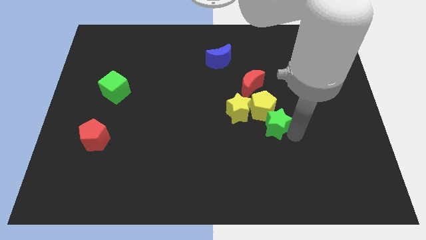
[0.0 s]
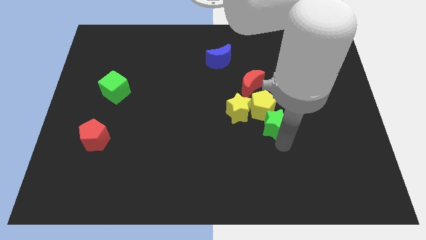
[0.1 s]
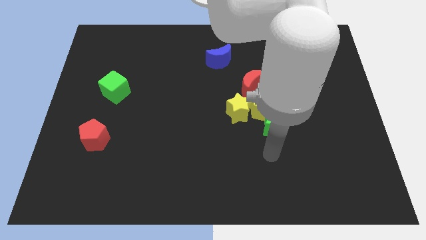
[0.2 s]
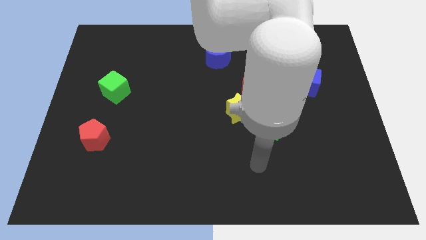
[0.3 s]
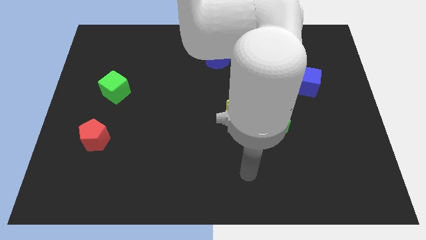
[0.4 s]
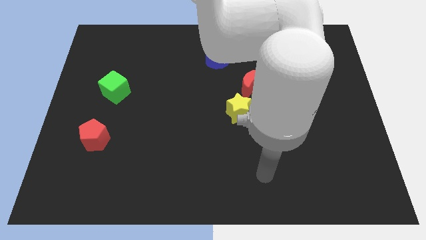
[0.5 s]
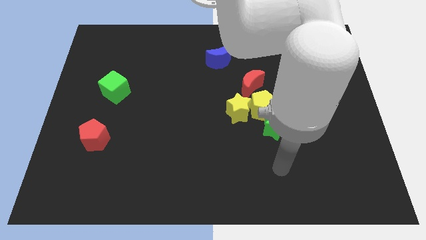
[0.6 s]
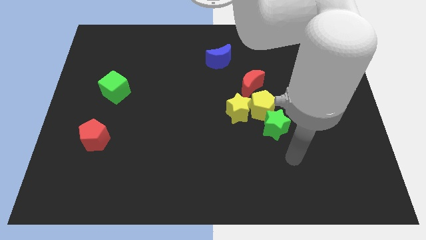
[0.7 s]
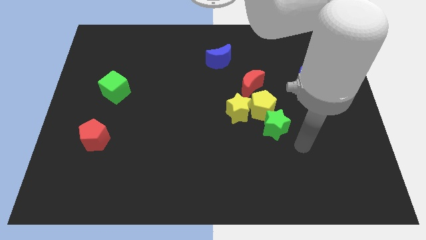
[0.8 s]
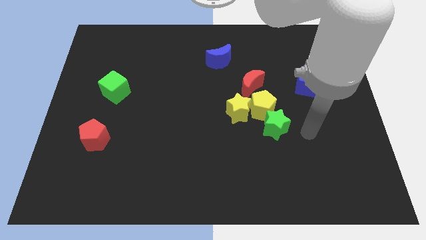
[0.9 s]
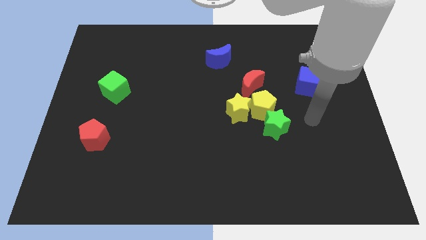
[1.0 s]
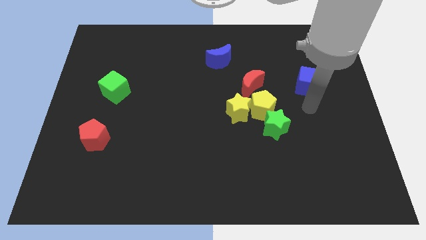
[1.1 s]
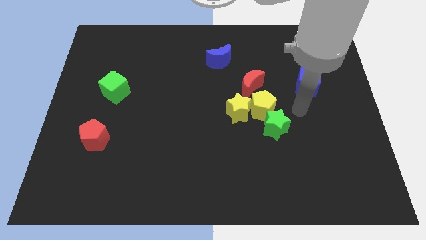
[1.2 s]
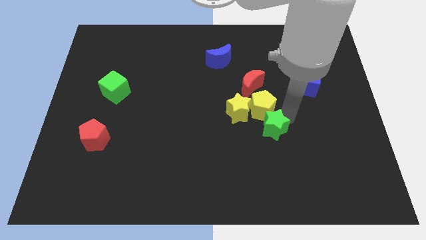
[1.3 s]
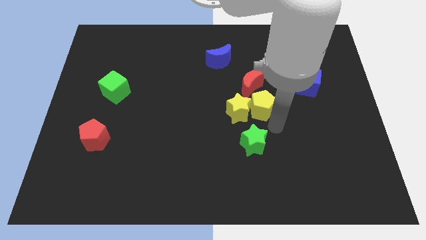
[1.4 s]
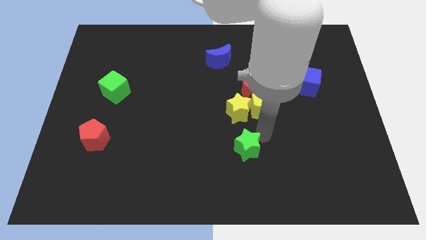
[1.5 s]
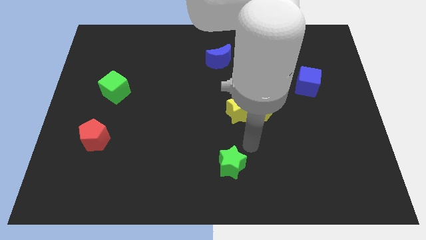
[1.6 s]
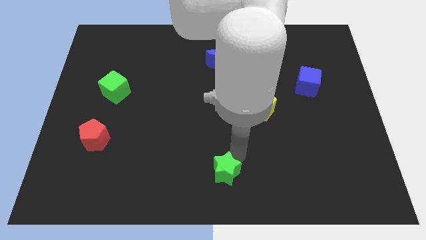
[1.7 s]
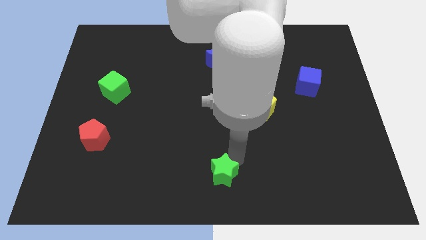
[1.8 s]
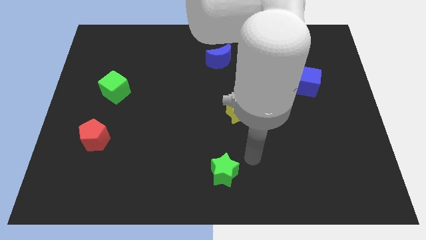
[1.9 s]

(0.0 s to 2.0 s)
move the green star towards the bottom center of the board

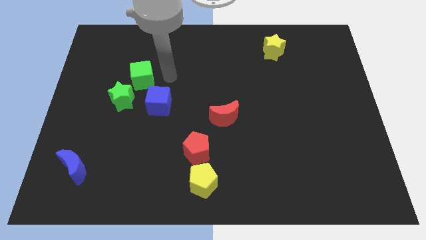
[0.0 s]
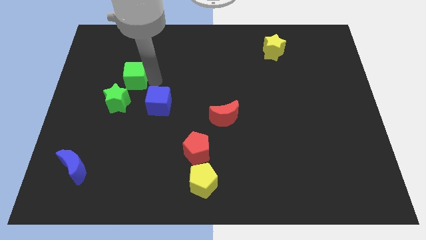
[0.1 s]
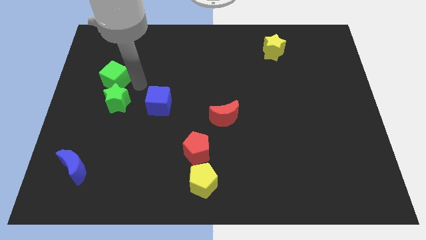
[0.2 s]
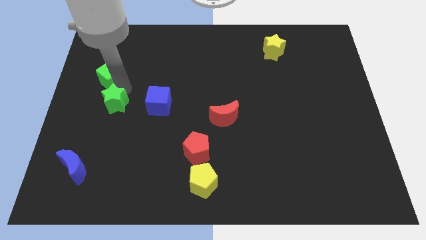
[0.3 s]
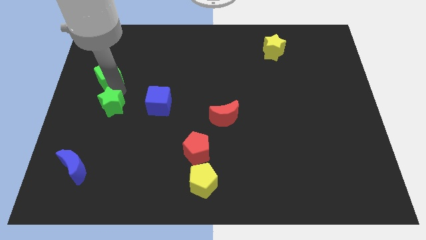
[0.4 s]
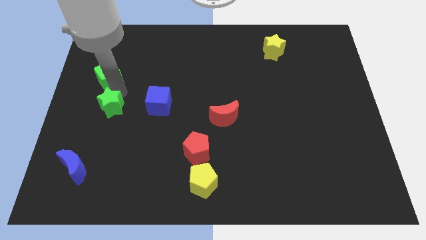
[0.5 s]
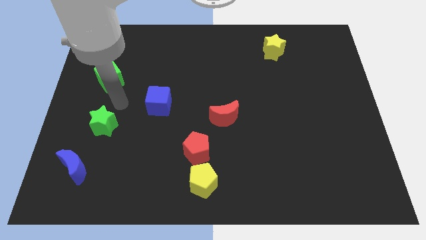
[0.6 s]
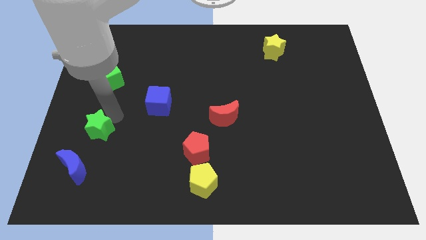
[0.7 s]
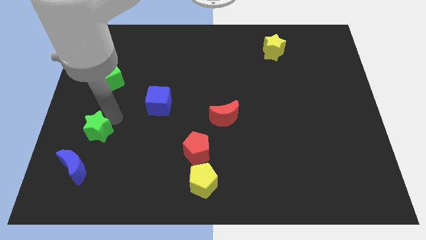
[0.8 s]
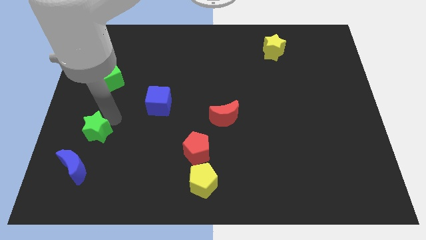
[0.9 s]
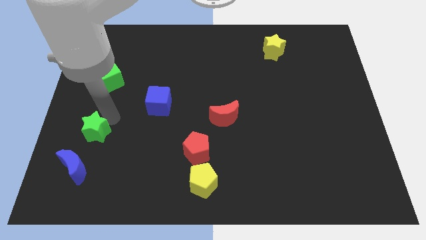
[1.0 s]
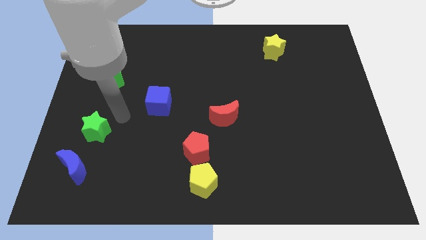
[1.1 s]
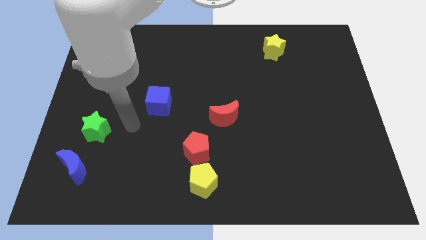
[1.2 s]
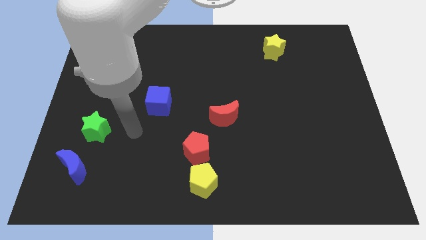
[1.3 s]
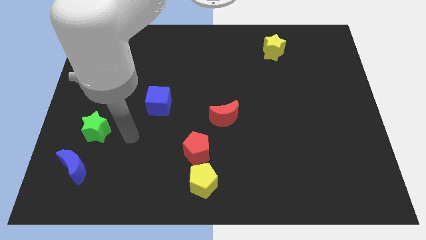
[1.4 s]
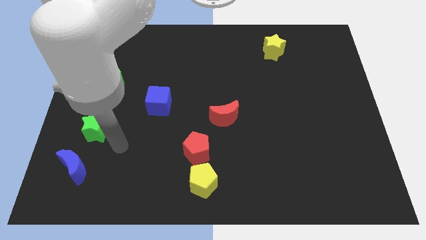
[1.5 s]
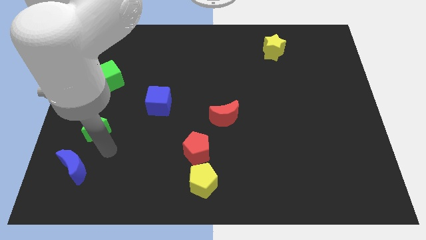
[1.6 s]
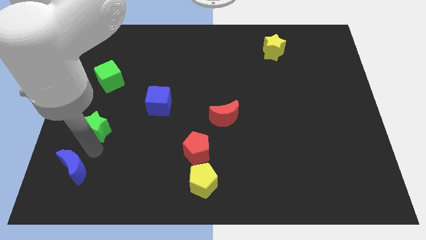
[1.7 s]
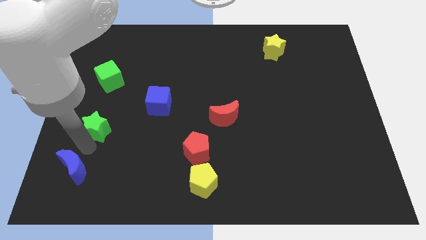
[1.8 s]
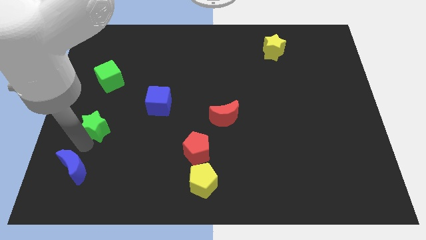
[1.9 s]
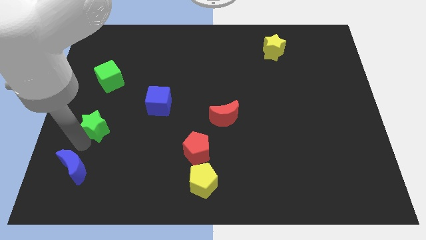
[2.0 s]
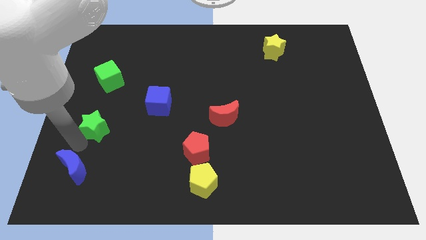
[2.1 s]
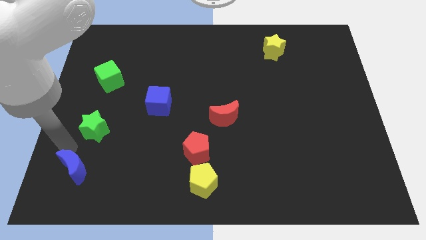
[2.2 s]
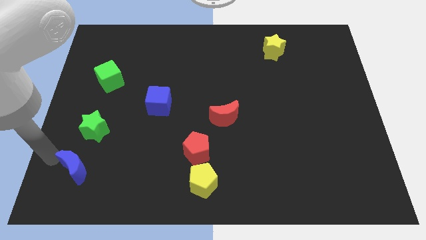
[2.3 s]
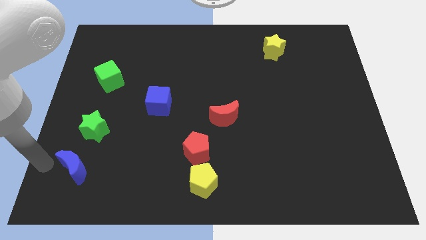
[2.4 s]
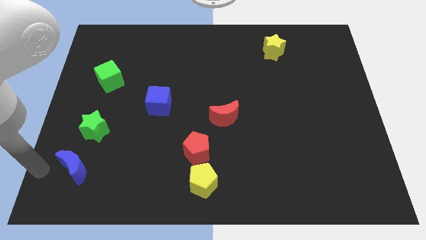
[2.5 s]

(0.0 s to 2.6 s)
separate green star from green cube

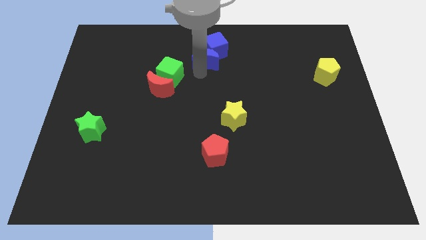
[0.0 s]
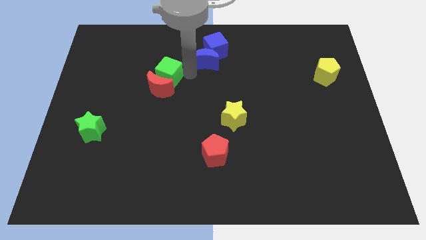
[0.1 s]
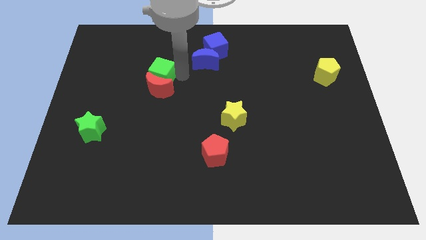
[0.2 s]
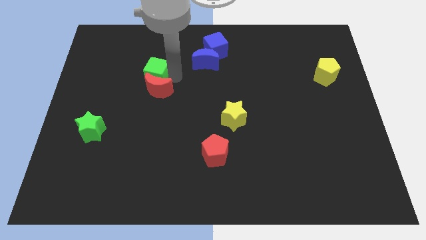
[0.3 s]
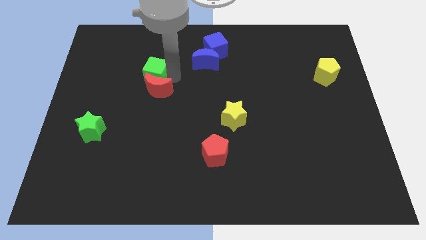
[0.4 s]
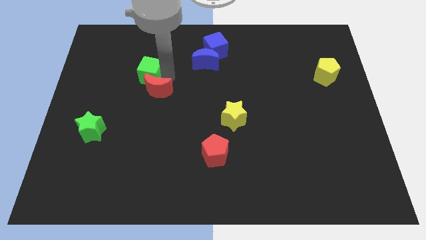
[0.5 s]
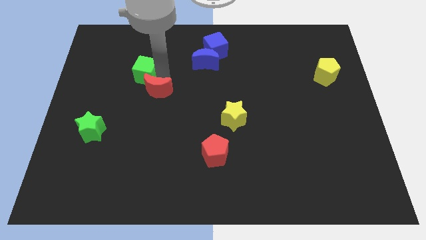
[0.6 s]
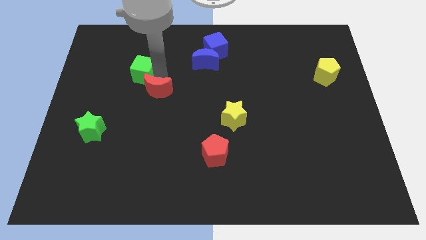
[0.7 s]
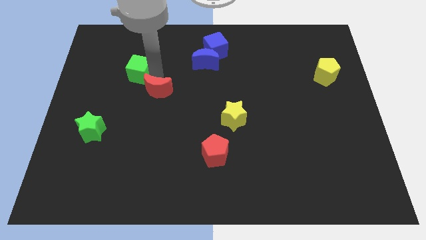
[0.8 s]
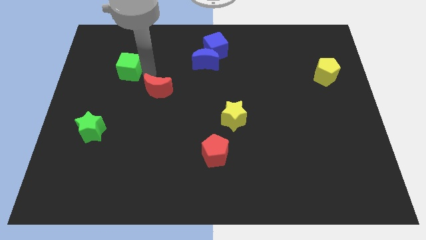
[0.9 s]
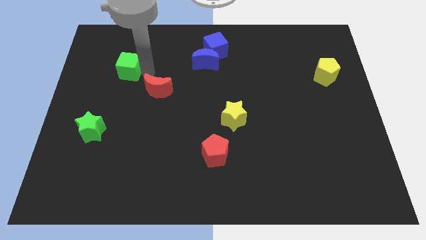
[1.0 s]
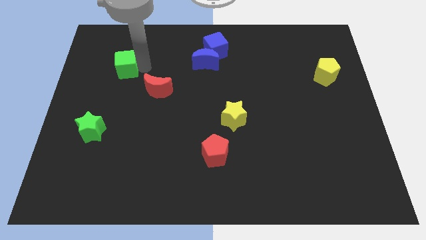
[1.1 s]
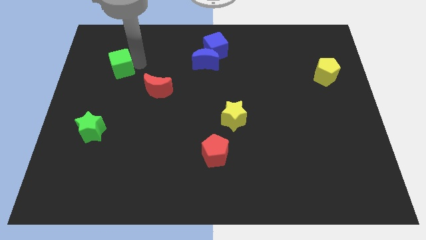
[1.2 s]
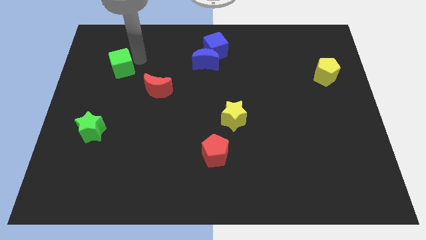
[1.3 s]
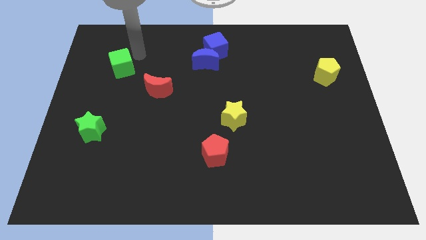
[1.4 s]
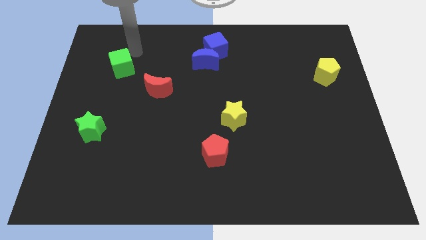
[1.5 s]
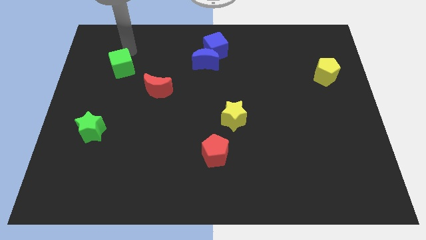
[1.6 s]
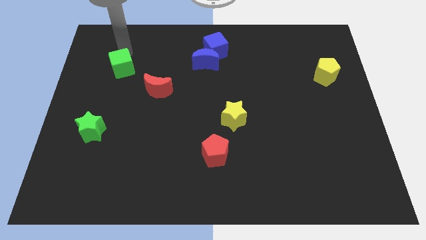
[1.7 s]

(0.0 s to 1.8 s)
separate the green cube from the red moon

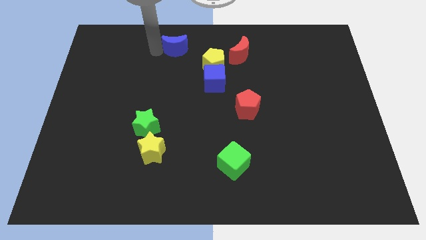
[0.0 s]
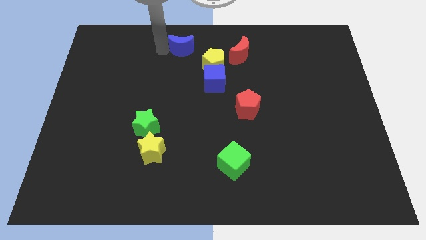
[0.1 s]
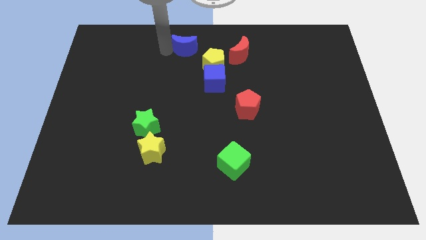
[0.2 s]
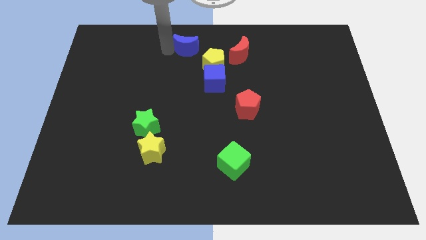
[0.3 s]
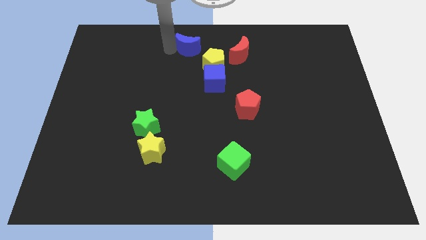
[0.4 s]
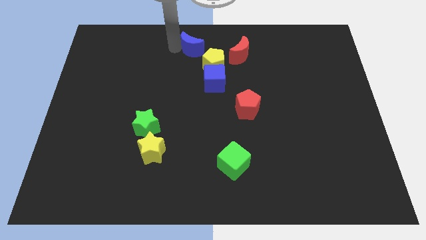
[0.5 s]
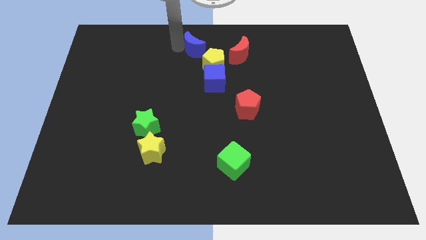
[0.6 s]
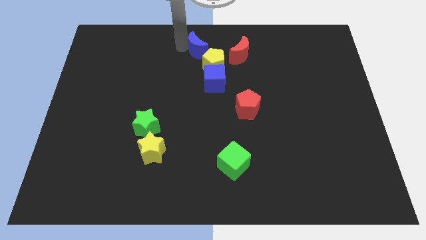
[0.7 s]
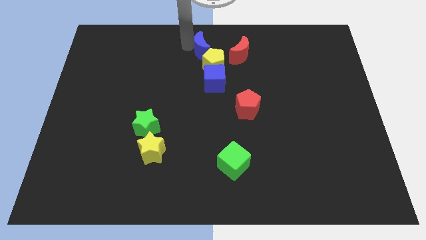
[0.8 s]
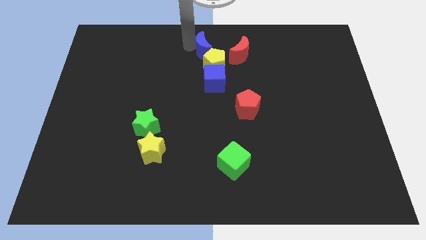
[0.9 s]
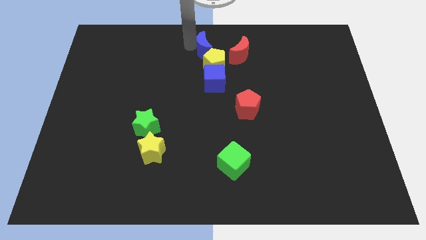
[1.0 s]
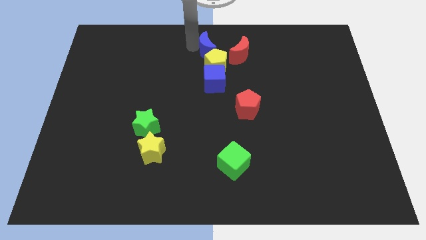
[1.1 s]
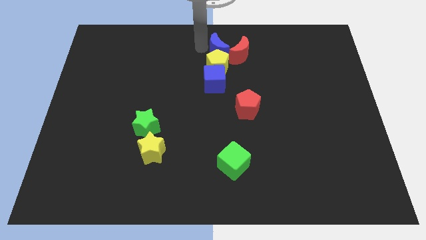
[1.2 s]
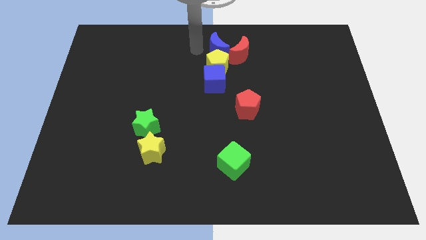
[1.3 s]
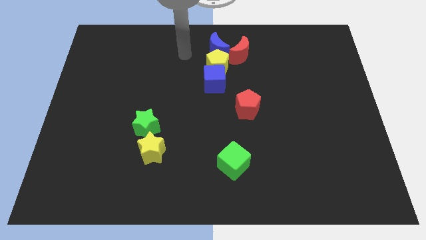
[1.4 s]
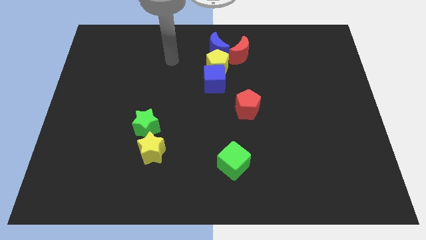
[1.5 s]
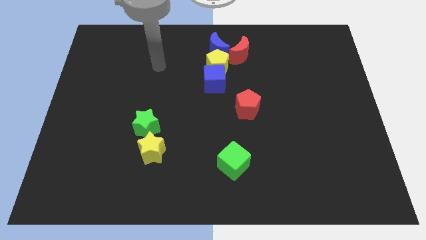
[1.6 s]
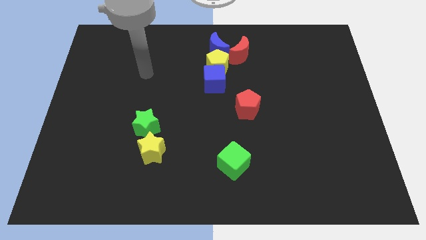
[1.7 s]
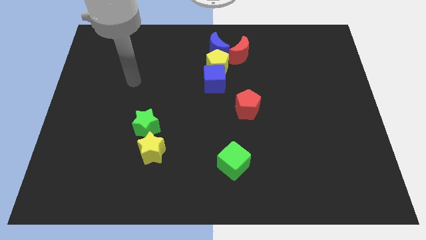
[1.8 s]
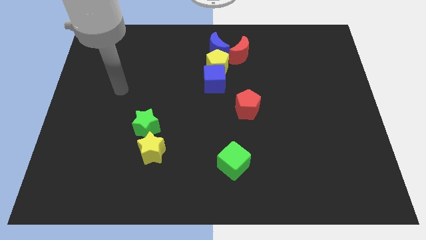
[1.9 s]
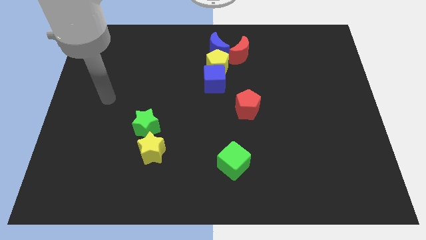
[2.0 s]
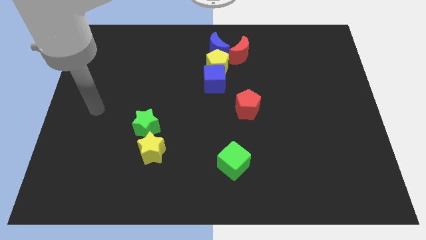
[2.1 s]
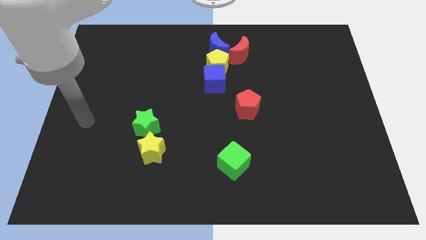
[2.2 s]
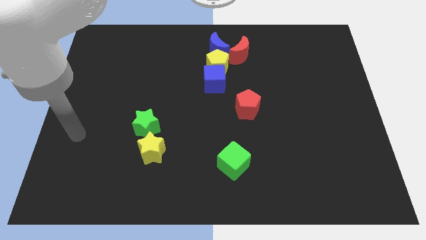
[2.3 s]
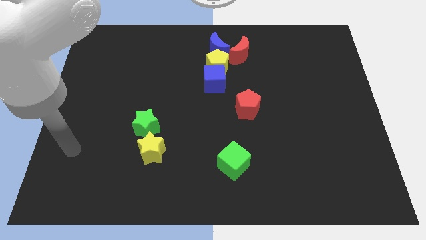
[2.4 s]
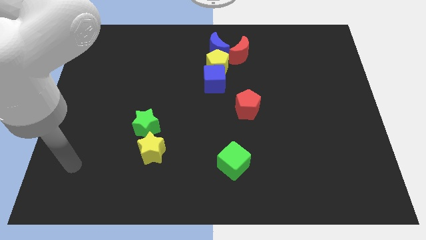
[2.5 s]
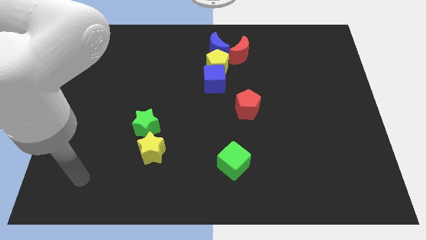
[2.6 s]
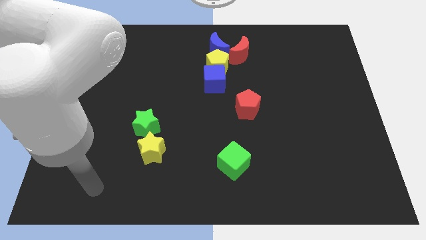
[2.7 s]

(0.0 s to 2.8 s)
place the blue moon above the yellow pentagon
